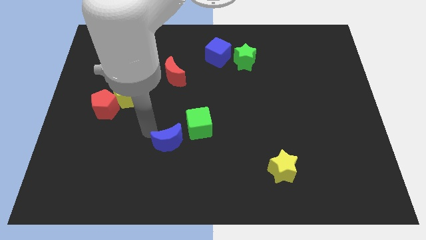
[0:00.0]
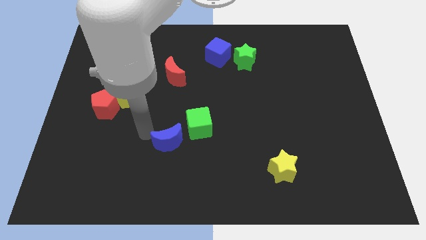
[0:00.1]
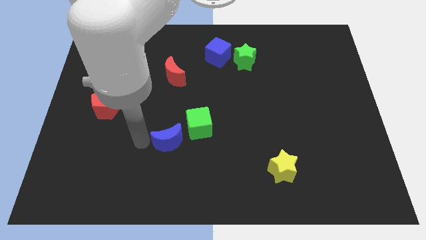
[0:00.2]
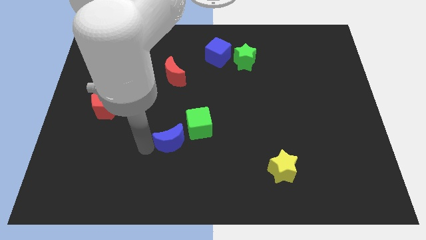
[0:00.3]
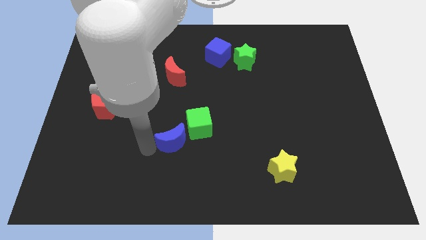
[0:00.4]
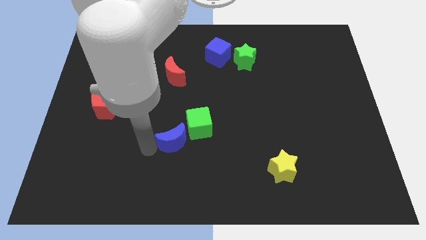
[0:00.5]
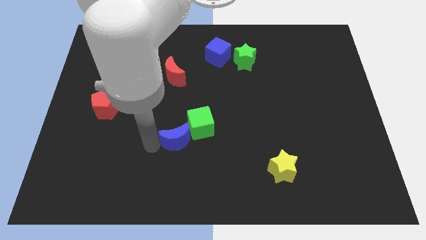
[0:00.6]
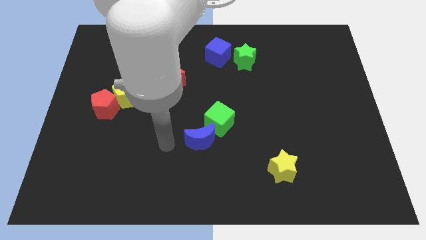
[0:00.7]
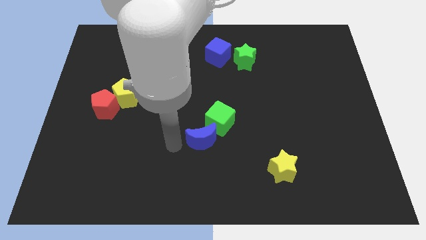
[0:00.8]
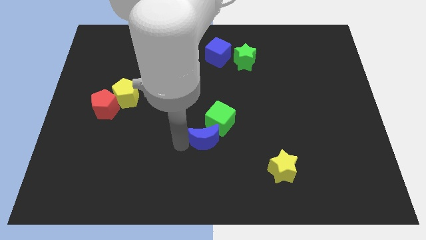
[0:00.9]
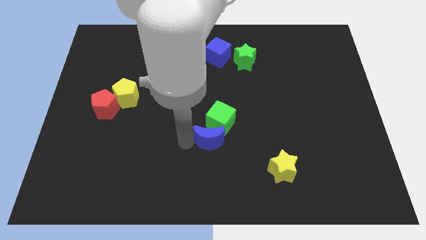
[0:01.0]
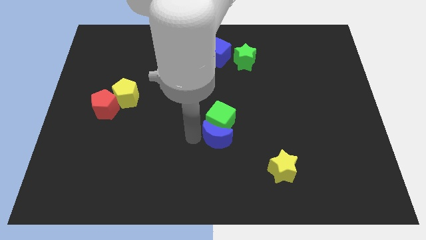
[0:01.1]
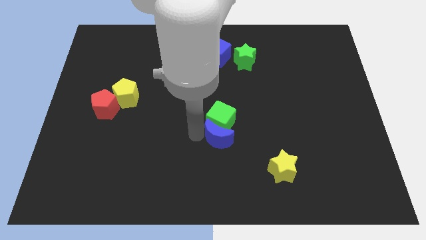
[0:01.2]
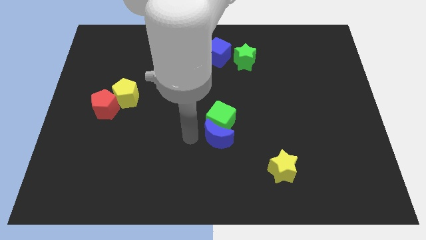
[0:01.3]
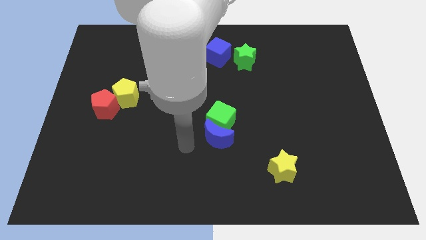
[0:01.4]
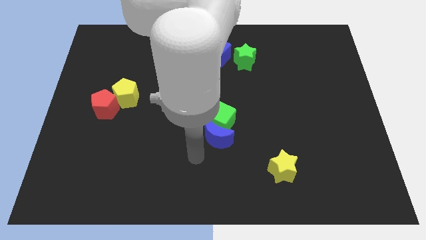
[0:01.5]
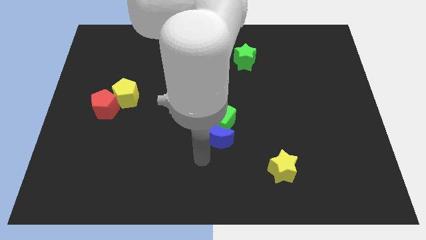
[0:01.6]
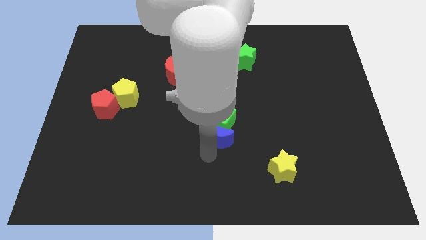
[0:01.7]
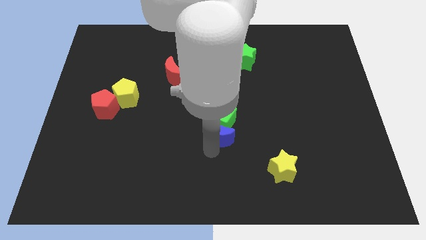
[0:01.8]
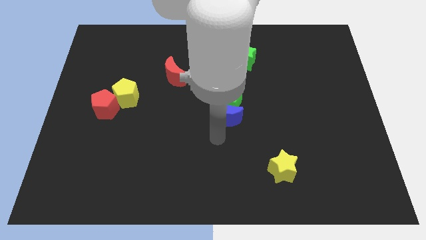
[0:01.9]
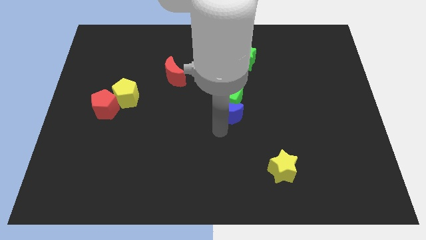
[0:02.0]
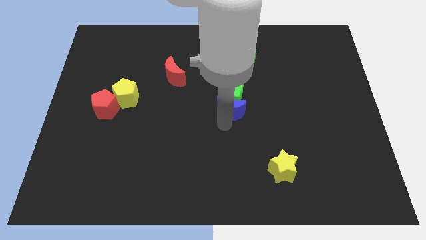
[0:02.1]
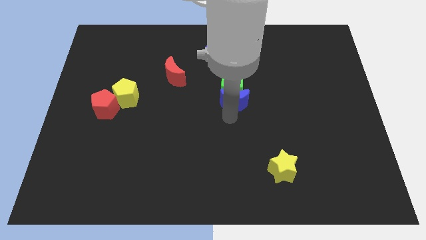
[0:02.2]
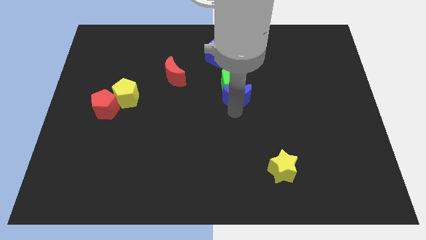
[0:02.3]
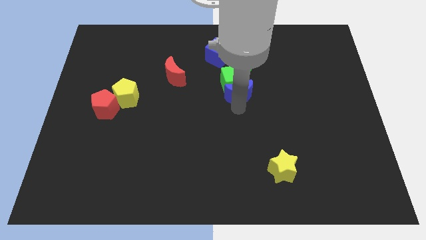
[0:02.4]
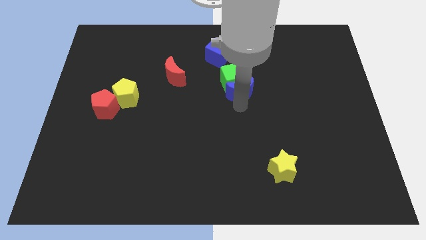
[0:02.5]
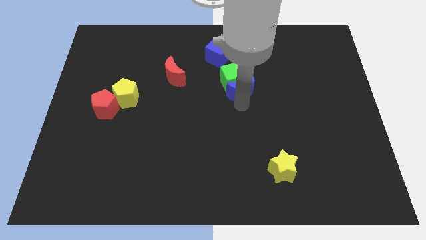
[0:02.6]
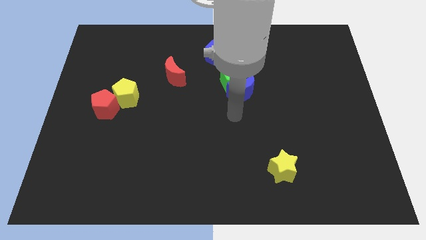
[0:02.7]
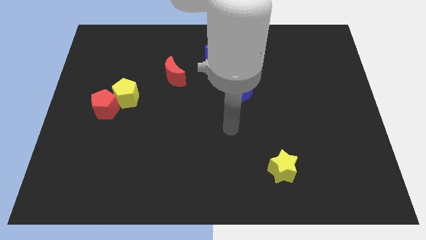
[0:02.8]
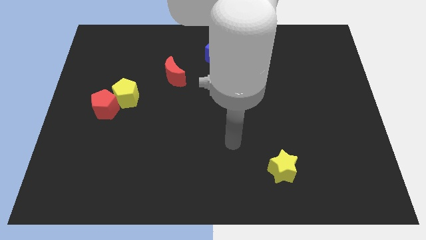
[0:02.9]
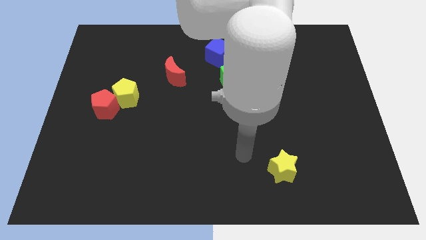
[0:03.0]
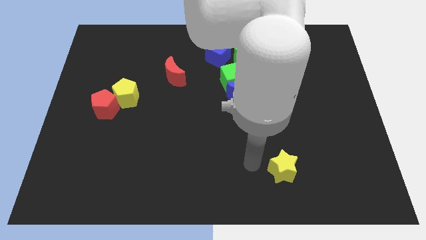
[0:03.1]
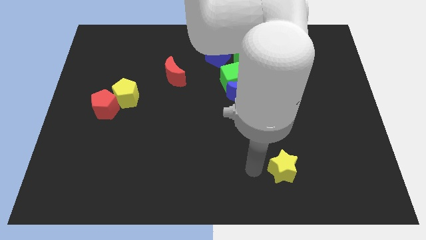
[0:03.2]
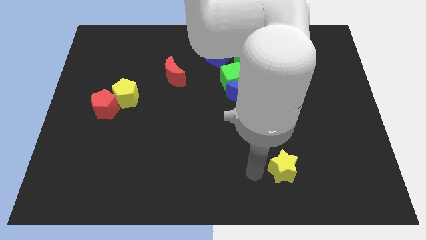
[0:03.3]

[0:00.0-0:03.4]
push the green cube to the bottom side of the blue cube with the blue moon

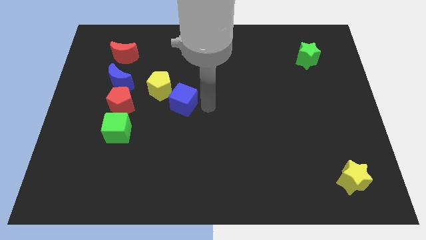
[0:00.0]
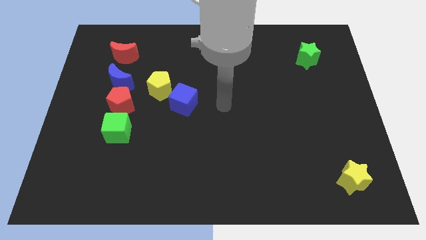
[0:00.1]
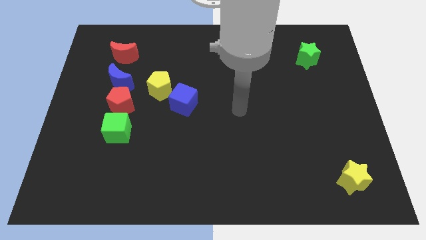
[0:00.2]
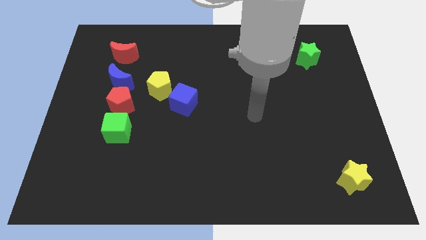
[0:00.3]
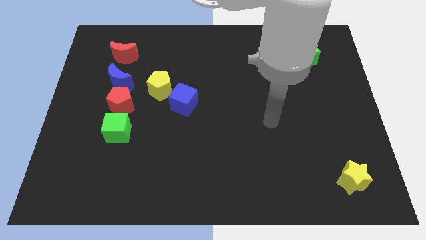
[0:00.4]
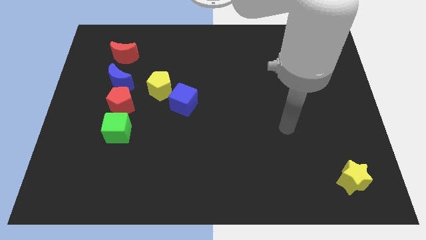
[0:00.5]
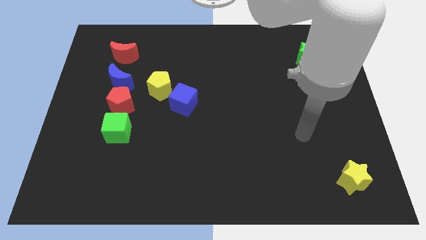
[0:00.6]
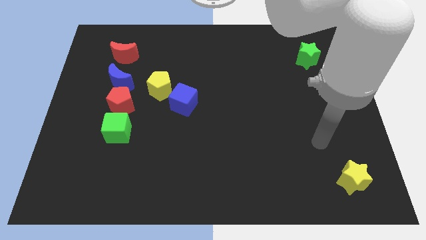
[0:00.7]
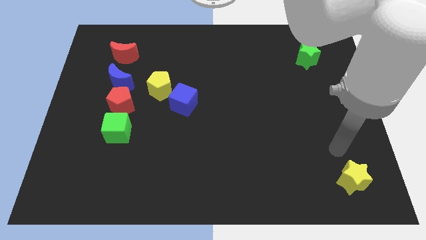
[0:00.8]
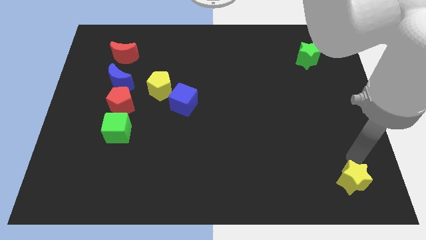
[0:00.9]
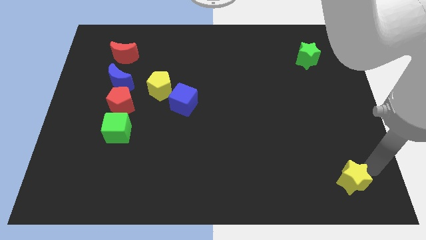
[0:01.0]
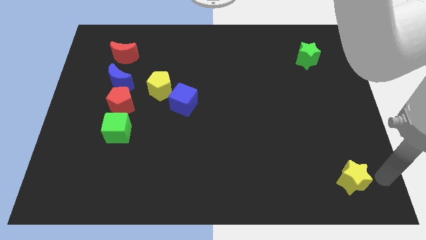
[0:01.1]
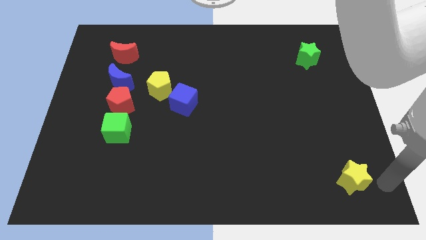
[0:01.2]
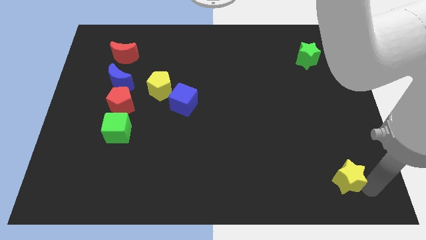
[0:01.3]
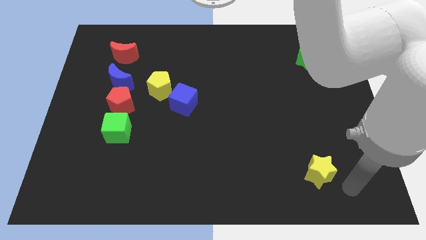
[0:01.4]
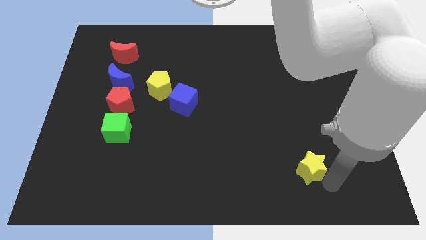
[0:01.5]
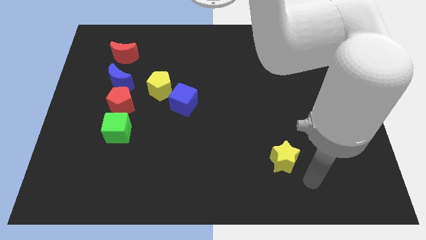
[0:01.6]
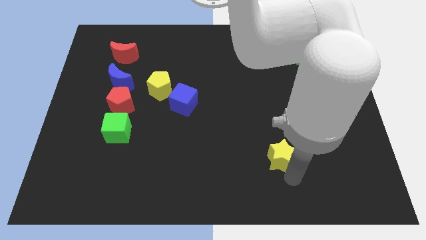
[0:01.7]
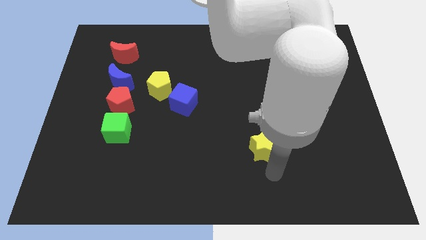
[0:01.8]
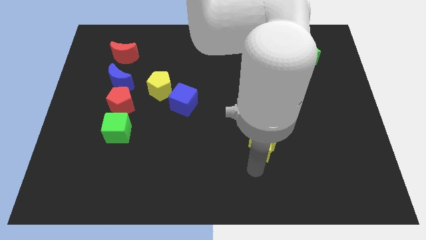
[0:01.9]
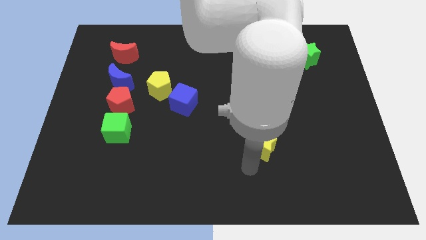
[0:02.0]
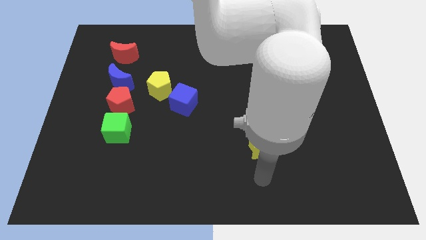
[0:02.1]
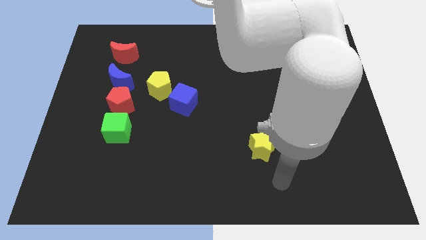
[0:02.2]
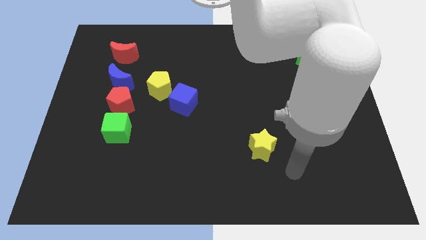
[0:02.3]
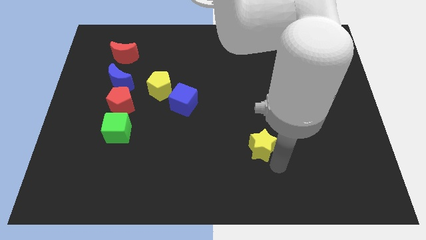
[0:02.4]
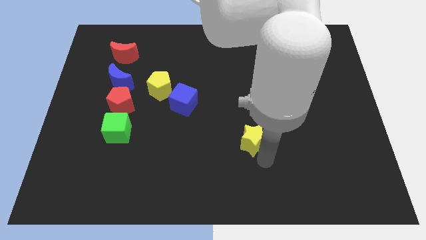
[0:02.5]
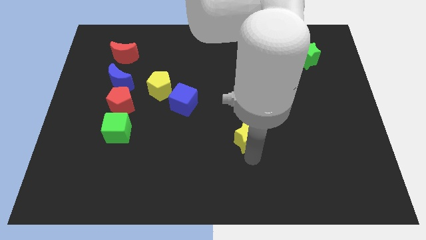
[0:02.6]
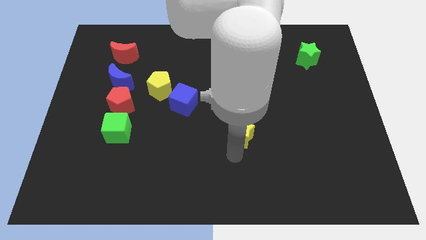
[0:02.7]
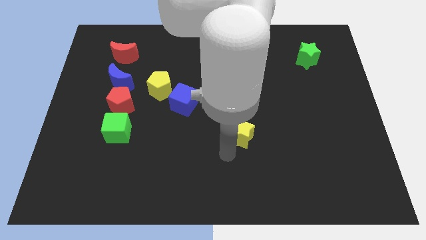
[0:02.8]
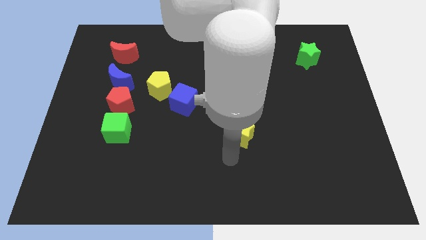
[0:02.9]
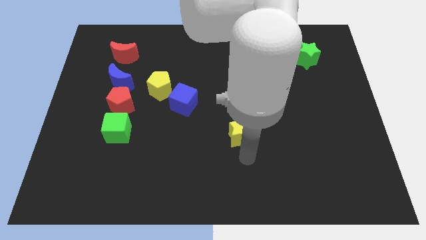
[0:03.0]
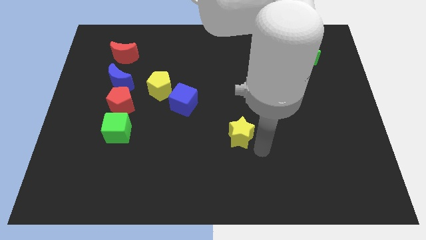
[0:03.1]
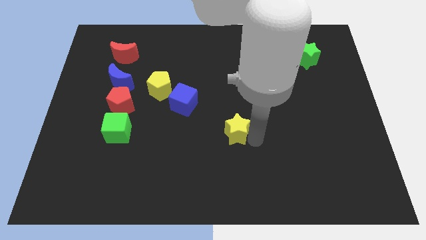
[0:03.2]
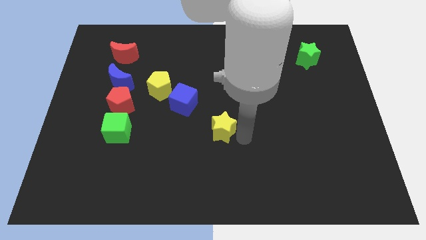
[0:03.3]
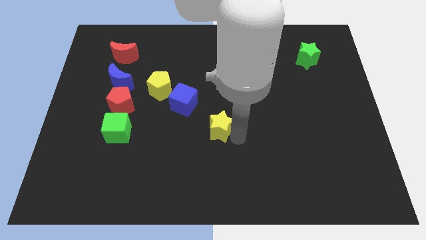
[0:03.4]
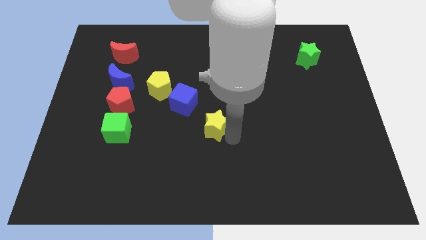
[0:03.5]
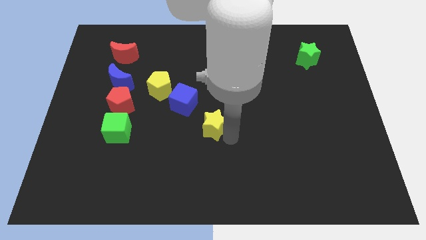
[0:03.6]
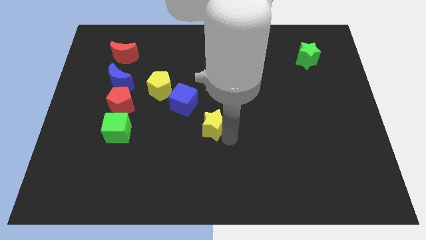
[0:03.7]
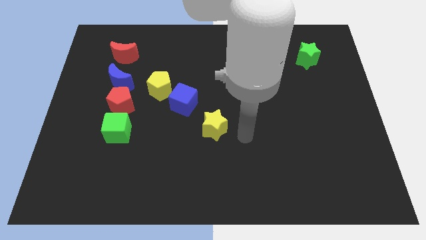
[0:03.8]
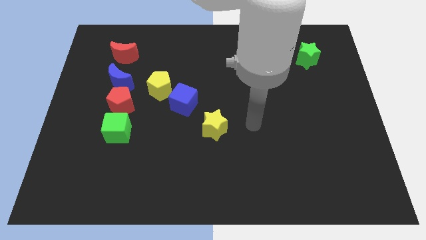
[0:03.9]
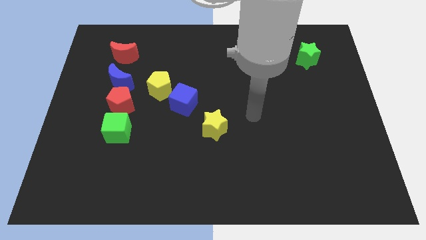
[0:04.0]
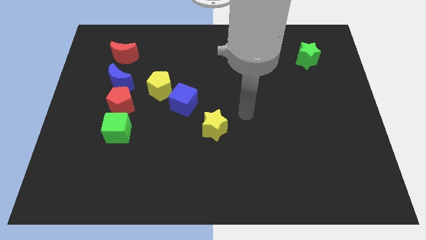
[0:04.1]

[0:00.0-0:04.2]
push the yellow star to the center of the board

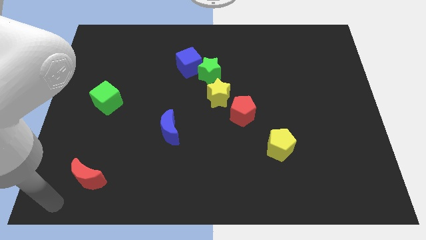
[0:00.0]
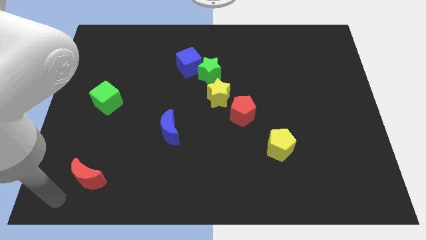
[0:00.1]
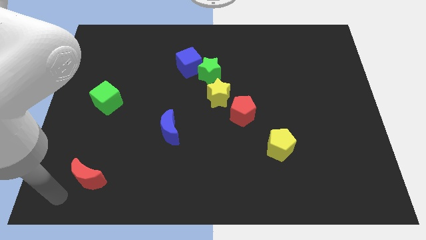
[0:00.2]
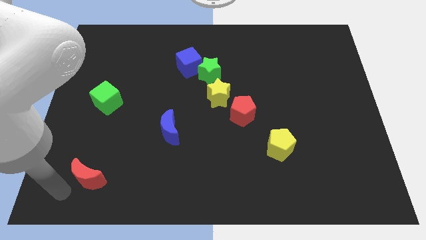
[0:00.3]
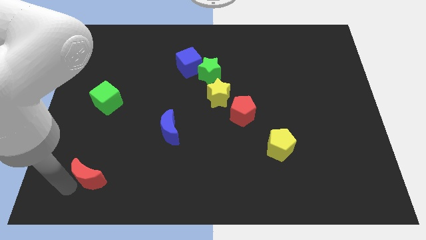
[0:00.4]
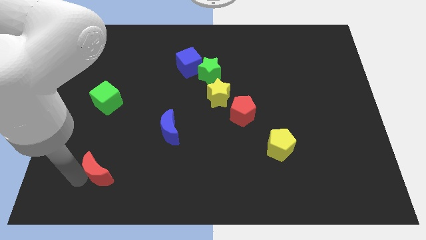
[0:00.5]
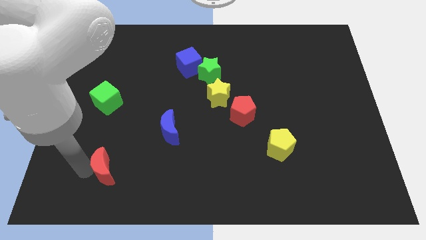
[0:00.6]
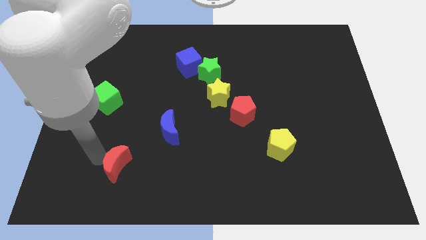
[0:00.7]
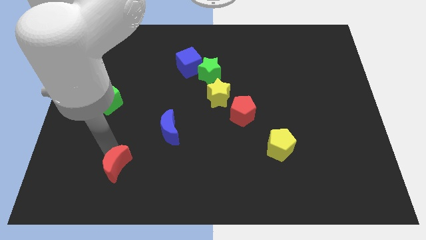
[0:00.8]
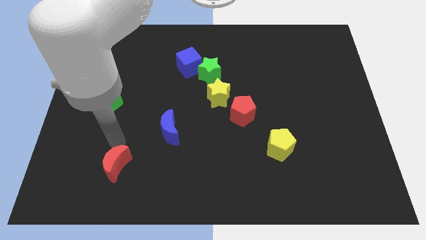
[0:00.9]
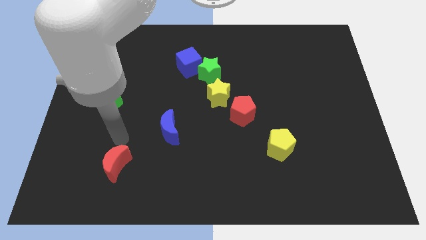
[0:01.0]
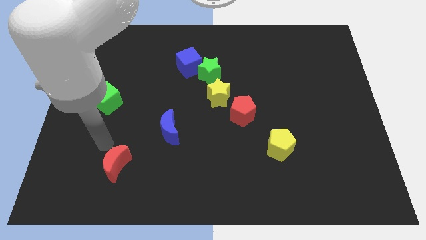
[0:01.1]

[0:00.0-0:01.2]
push the red crescent slightly to the top

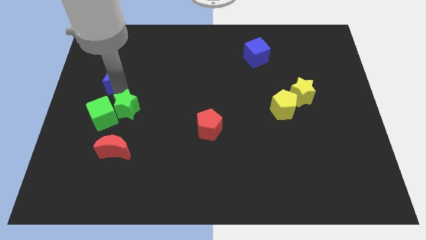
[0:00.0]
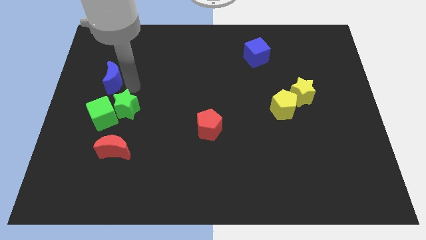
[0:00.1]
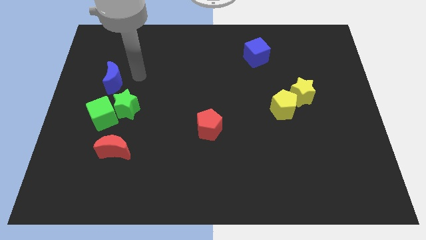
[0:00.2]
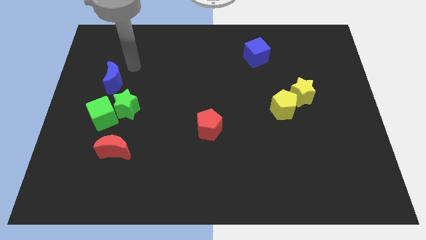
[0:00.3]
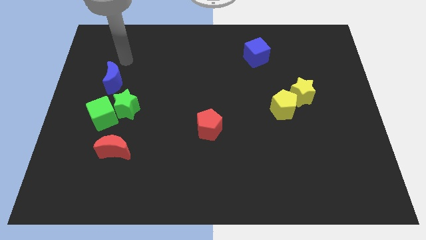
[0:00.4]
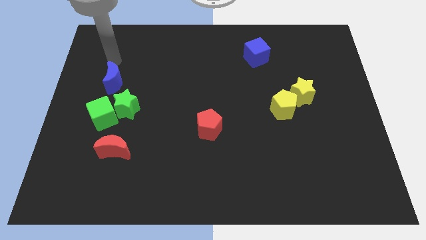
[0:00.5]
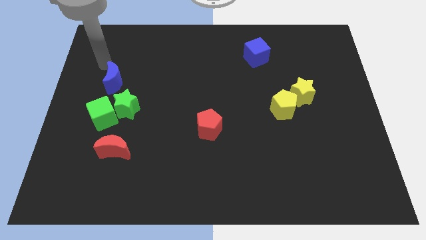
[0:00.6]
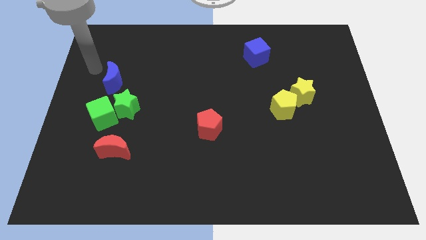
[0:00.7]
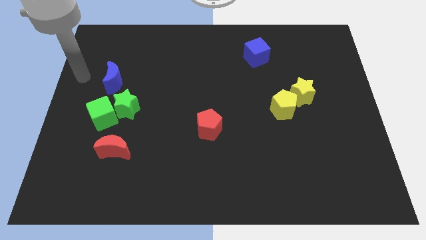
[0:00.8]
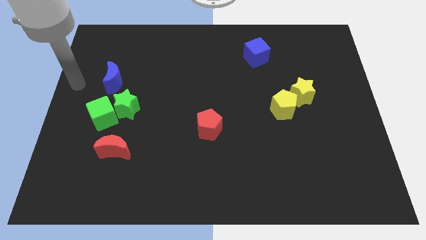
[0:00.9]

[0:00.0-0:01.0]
move your arm towards the center left of the board
